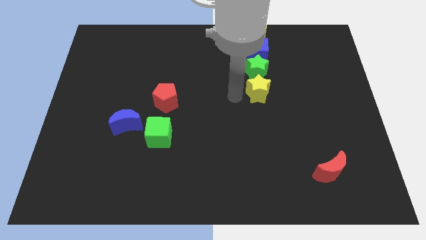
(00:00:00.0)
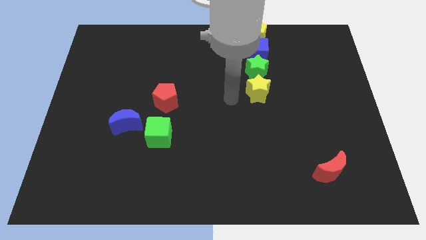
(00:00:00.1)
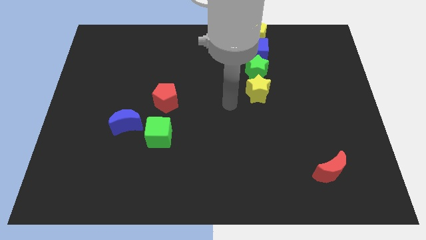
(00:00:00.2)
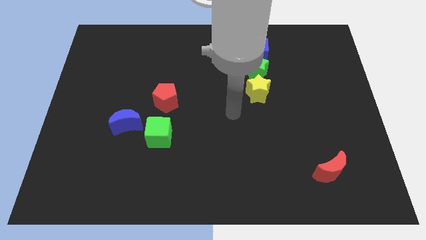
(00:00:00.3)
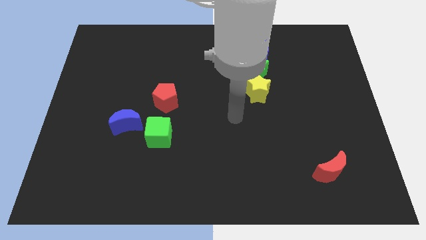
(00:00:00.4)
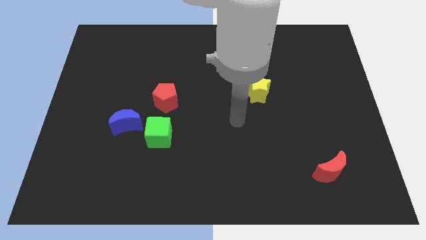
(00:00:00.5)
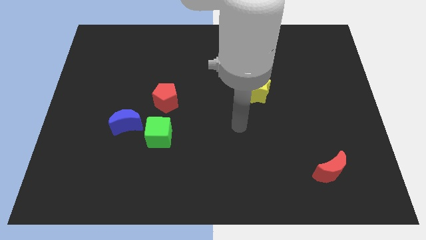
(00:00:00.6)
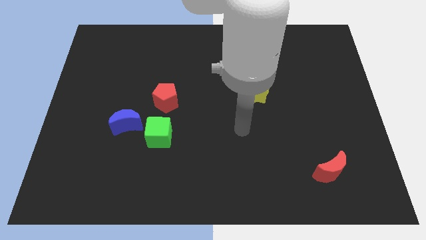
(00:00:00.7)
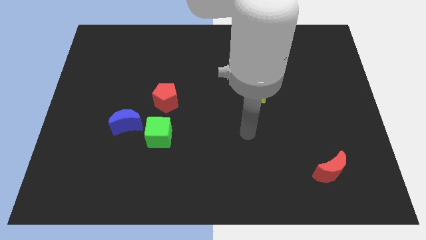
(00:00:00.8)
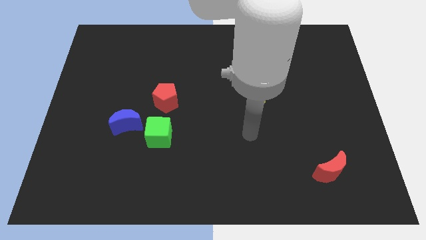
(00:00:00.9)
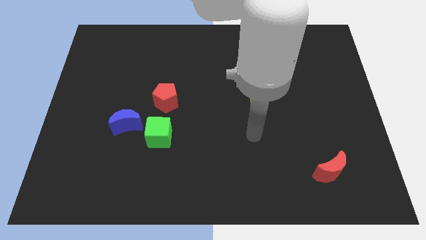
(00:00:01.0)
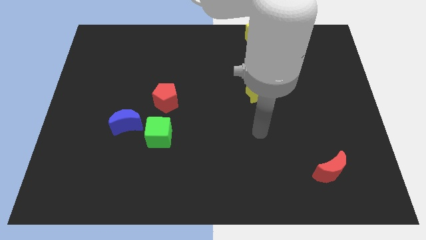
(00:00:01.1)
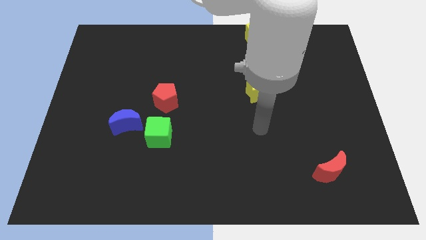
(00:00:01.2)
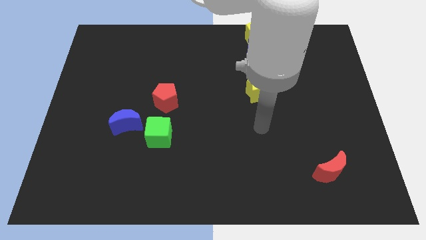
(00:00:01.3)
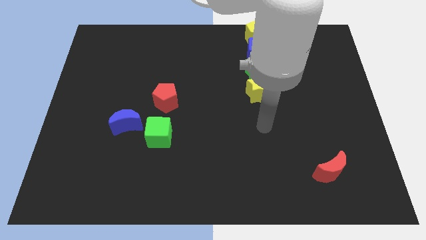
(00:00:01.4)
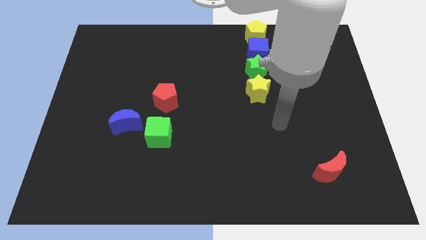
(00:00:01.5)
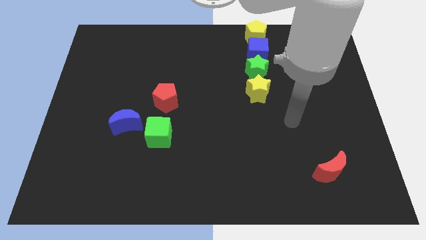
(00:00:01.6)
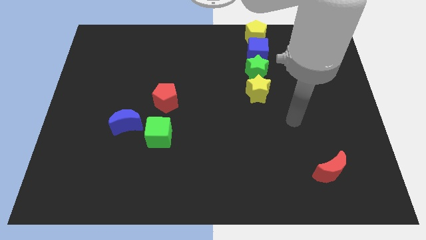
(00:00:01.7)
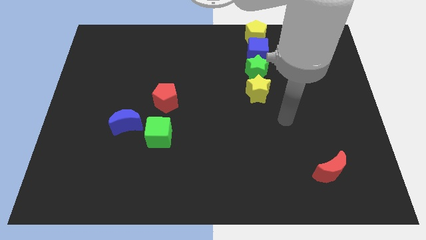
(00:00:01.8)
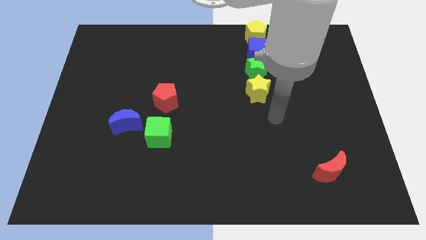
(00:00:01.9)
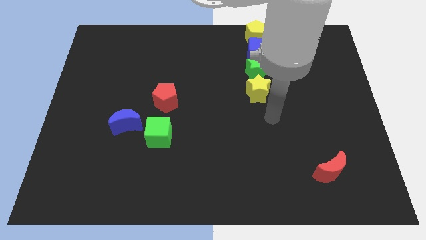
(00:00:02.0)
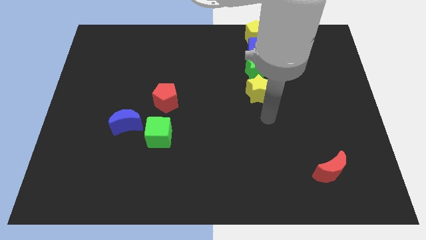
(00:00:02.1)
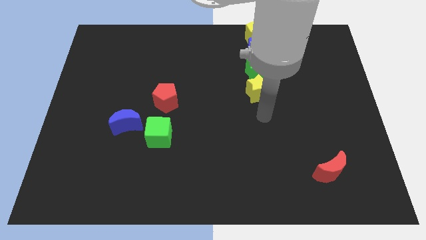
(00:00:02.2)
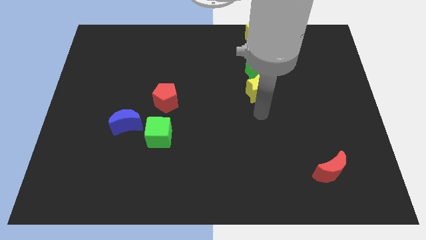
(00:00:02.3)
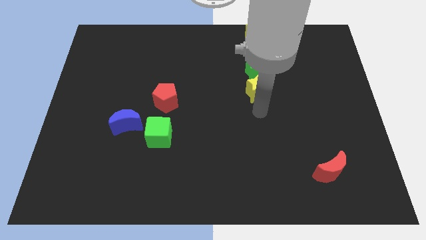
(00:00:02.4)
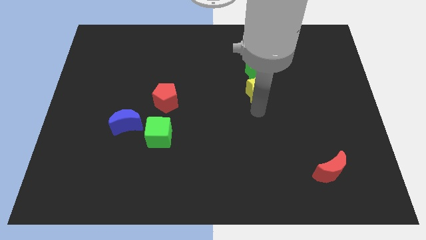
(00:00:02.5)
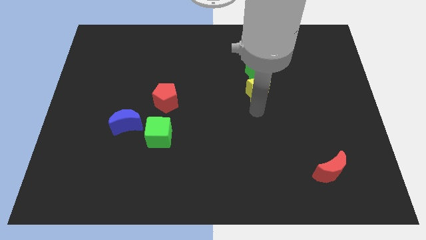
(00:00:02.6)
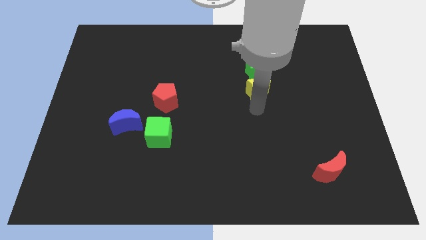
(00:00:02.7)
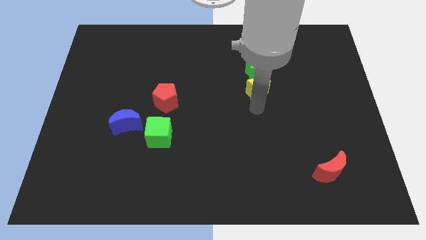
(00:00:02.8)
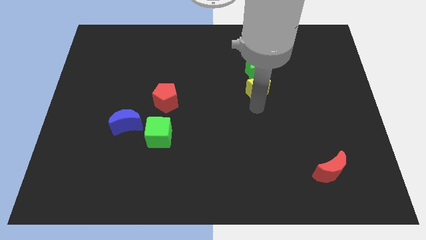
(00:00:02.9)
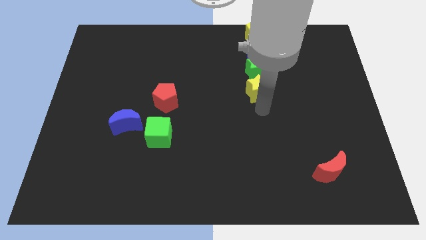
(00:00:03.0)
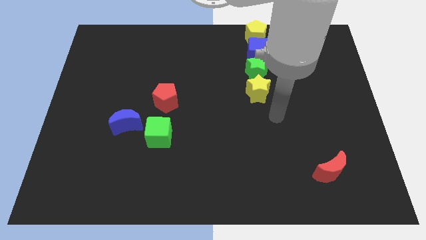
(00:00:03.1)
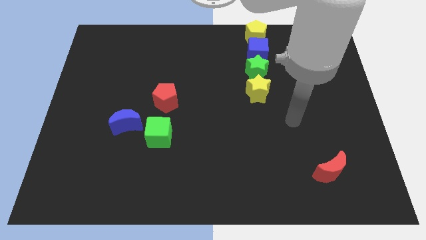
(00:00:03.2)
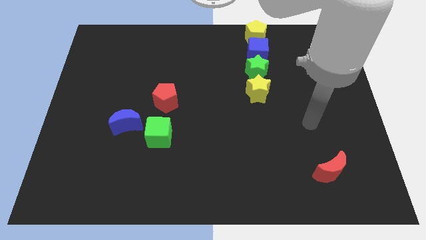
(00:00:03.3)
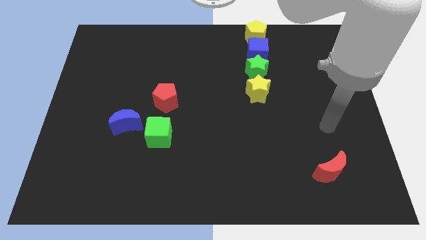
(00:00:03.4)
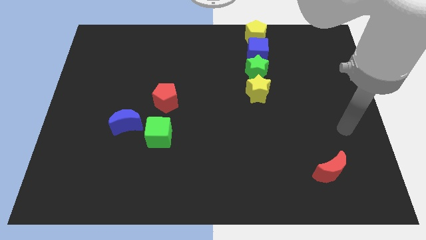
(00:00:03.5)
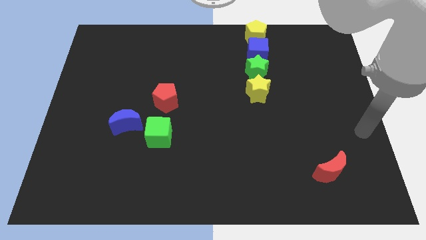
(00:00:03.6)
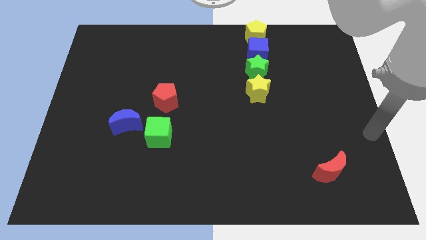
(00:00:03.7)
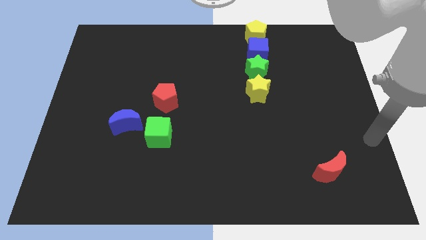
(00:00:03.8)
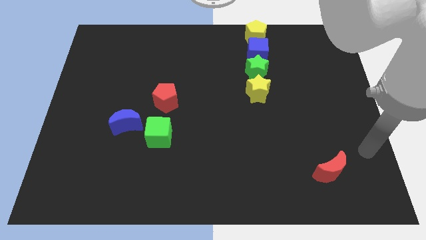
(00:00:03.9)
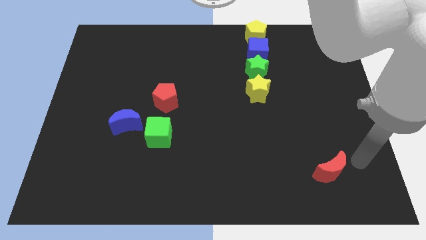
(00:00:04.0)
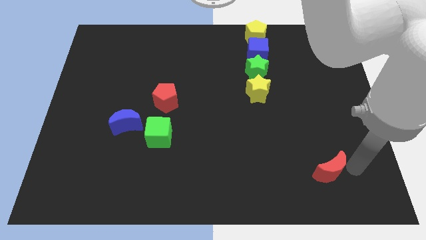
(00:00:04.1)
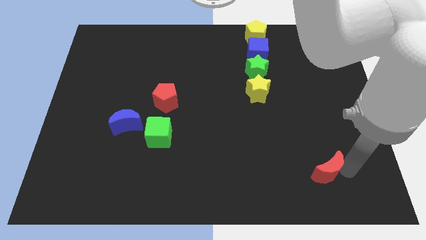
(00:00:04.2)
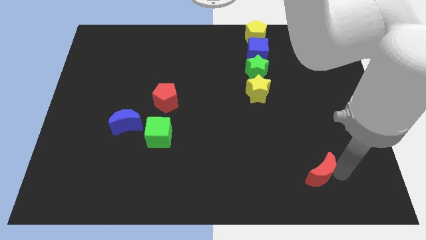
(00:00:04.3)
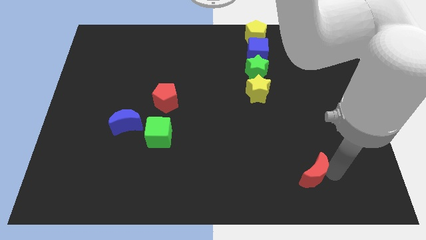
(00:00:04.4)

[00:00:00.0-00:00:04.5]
move the red crescent to the left

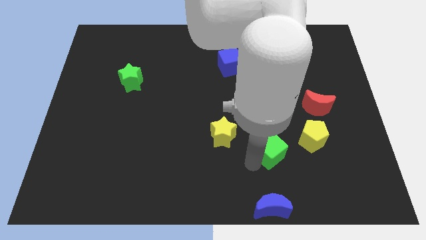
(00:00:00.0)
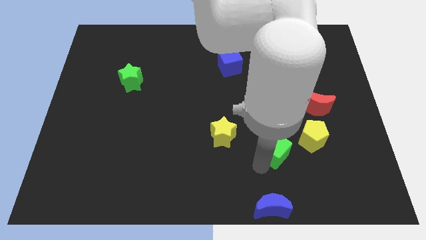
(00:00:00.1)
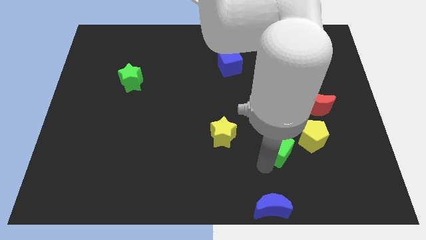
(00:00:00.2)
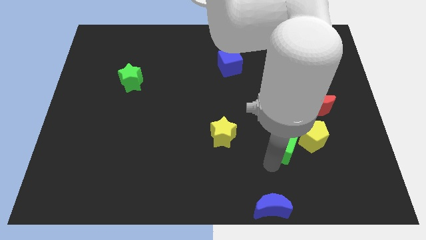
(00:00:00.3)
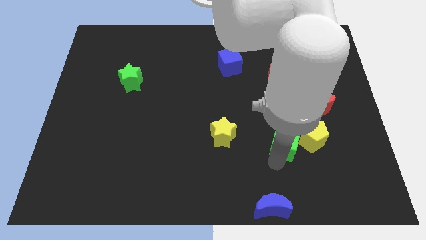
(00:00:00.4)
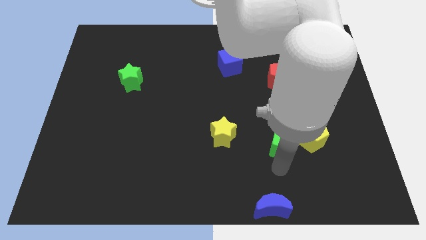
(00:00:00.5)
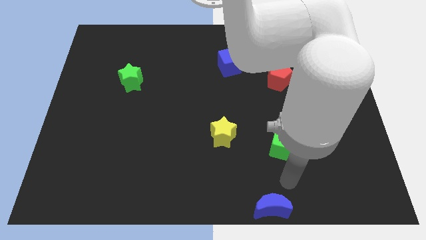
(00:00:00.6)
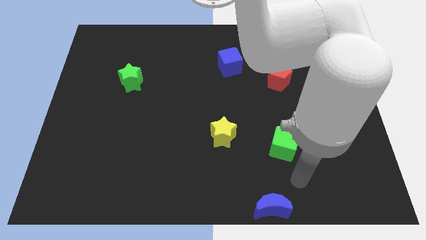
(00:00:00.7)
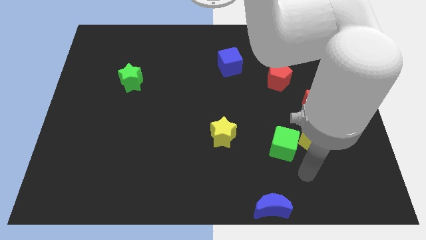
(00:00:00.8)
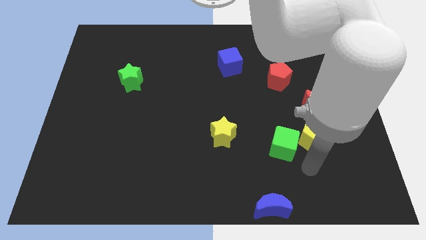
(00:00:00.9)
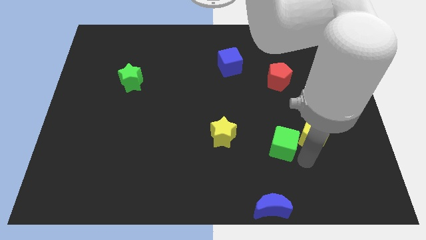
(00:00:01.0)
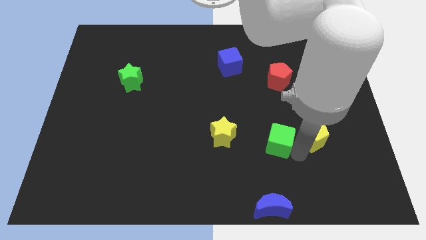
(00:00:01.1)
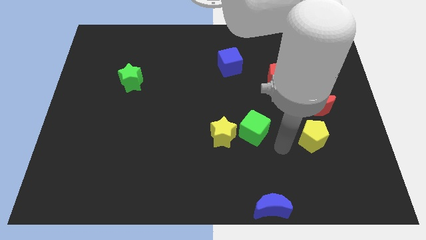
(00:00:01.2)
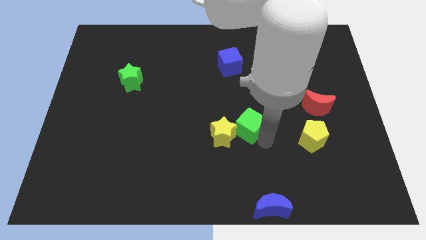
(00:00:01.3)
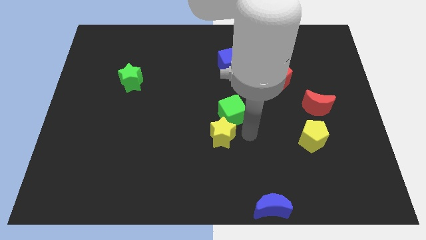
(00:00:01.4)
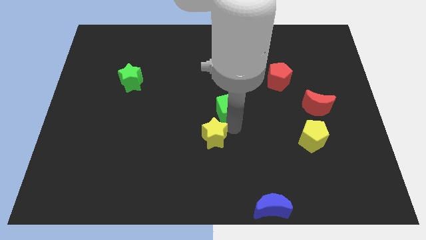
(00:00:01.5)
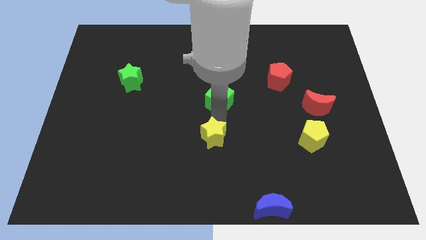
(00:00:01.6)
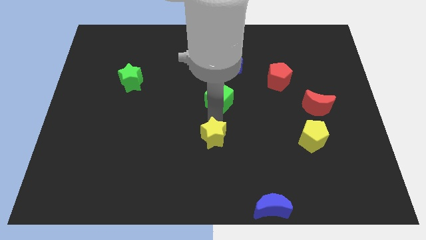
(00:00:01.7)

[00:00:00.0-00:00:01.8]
place the green cube above the yellow star

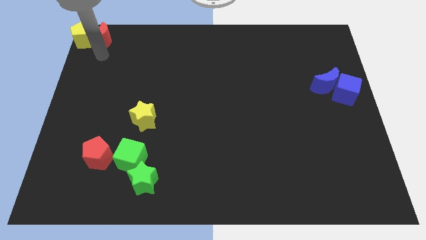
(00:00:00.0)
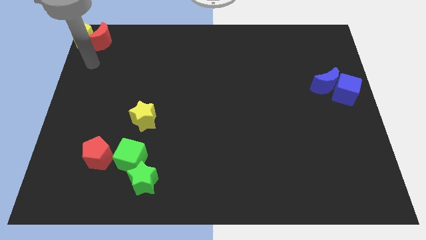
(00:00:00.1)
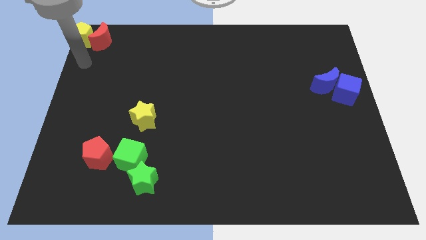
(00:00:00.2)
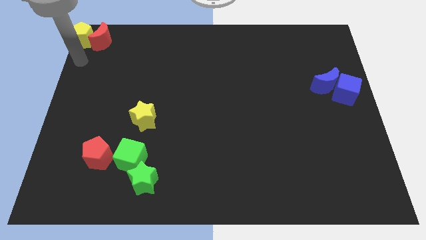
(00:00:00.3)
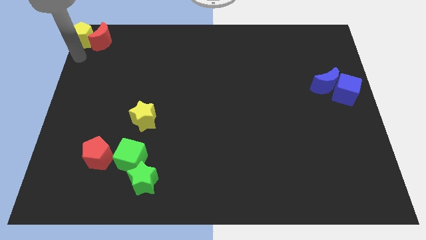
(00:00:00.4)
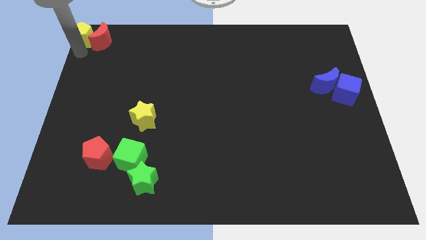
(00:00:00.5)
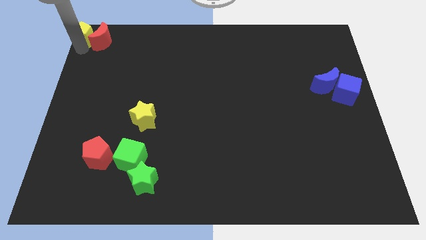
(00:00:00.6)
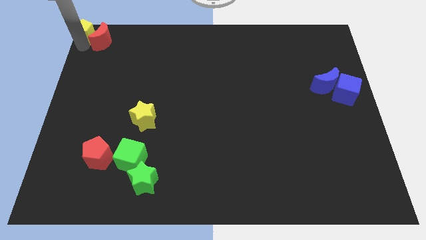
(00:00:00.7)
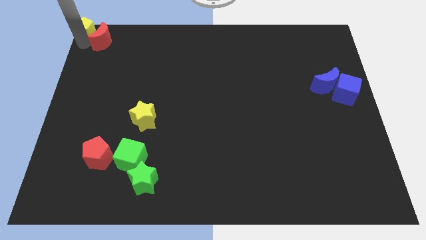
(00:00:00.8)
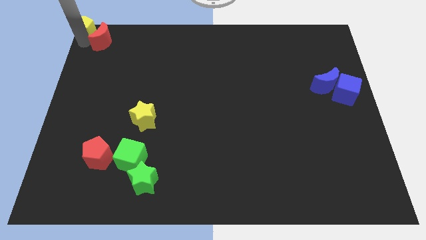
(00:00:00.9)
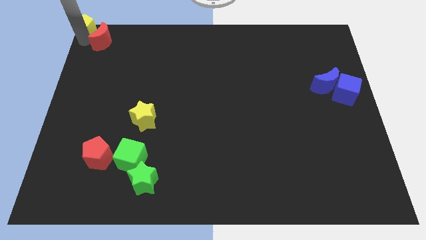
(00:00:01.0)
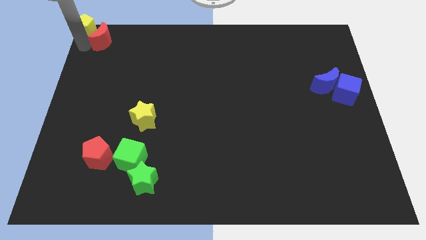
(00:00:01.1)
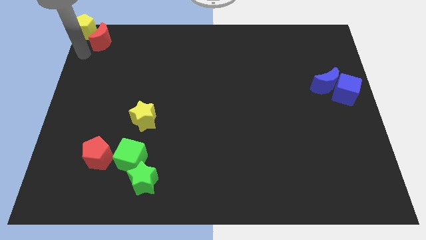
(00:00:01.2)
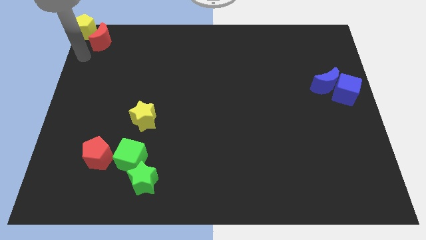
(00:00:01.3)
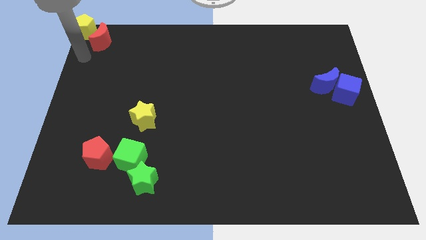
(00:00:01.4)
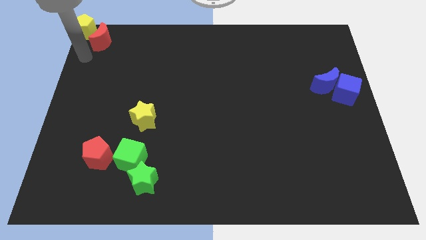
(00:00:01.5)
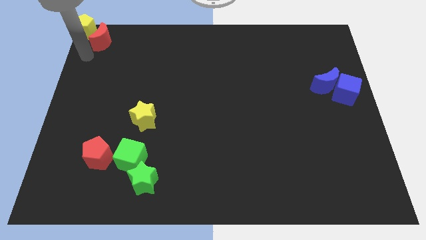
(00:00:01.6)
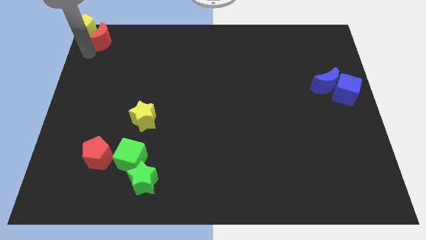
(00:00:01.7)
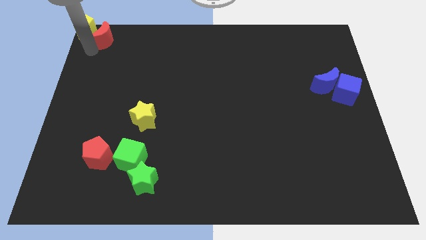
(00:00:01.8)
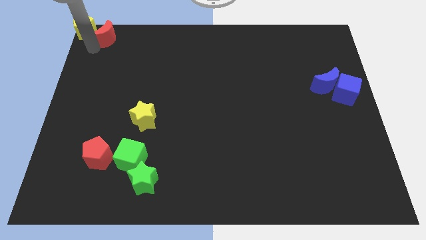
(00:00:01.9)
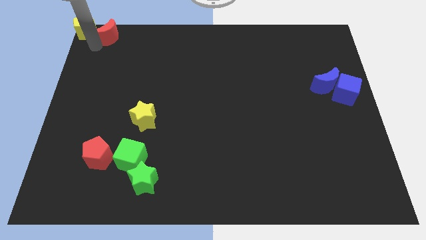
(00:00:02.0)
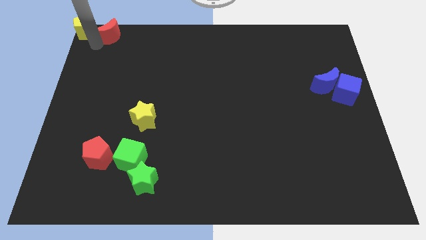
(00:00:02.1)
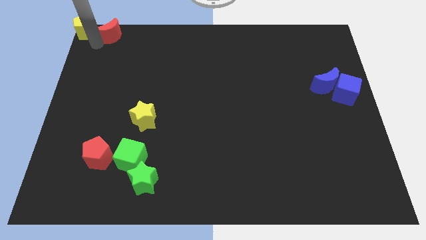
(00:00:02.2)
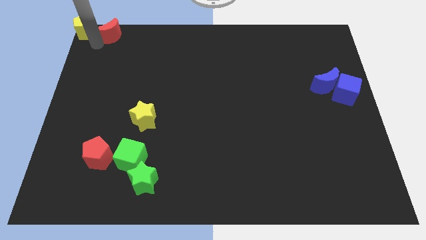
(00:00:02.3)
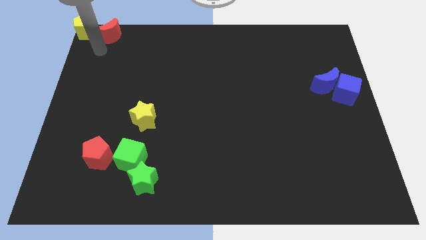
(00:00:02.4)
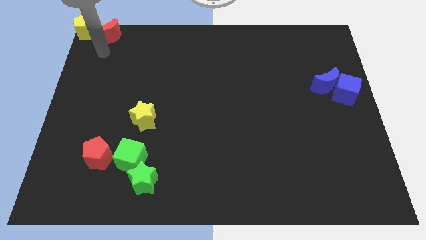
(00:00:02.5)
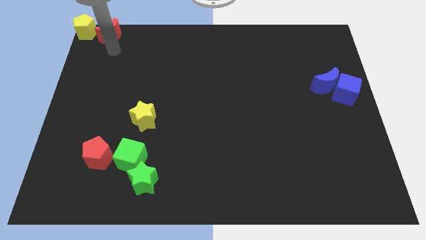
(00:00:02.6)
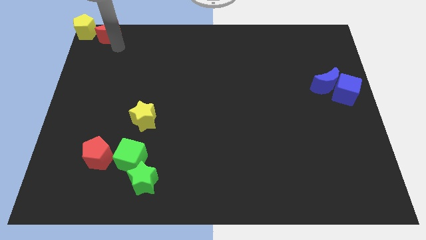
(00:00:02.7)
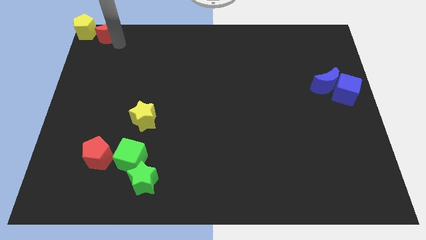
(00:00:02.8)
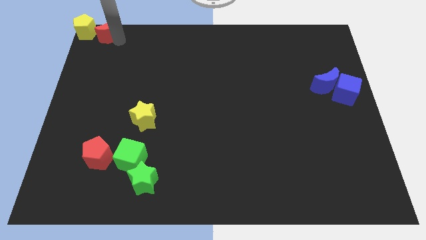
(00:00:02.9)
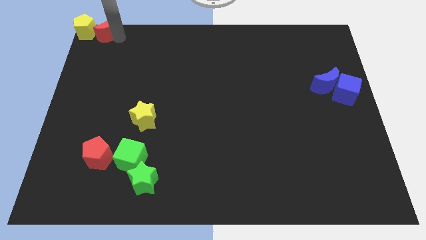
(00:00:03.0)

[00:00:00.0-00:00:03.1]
adjust the yellow pentagon and red crescent at the top left corner
